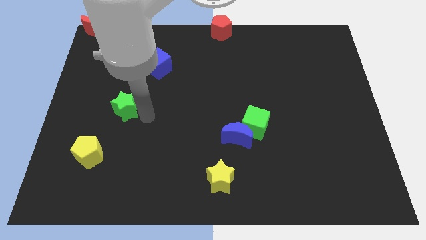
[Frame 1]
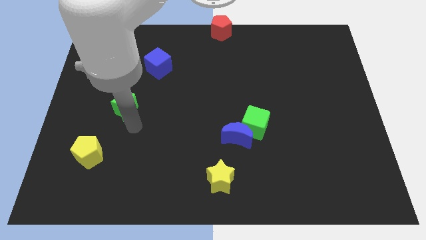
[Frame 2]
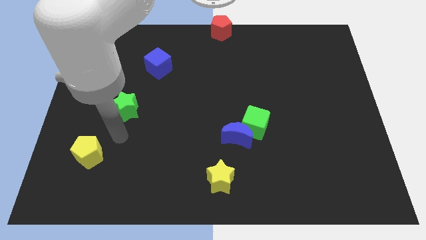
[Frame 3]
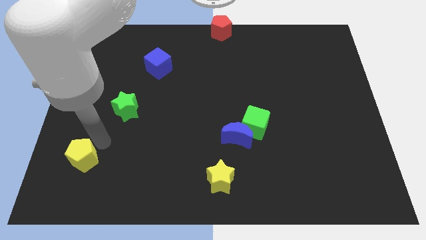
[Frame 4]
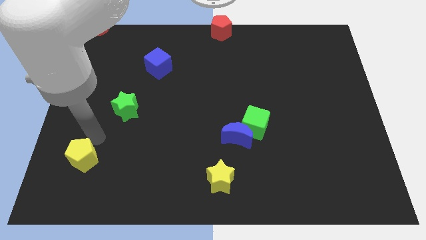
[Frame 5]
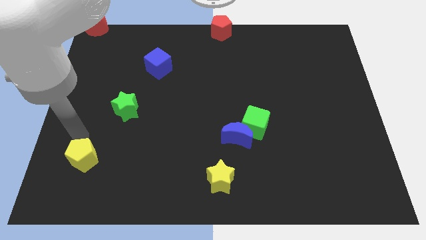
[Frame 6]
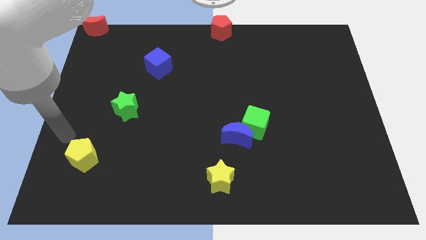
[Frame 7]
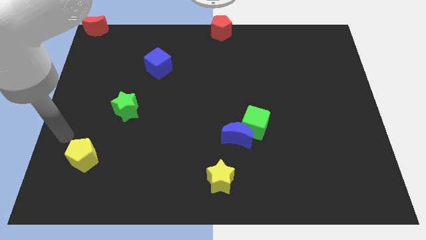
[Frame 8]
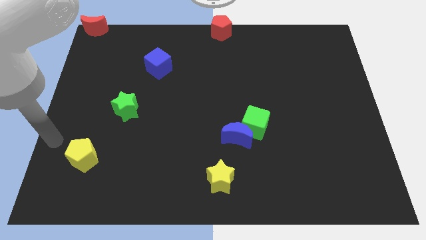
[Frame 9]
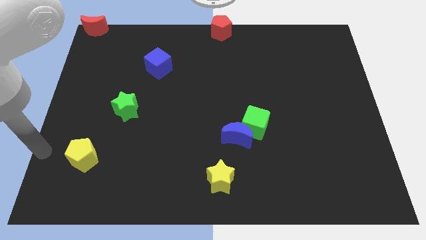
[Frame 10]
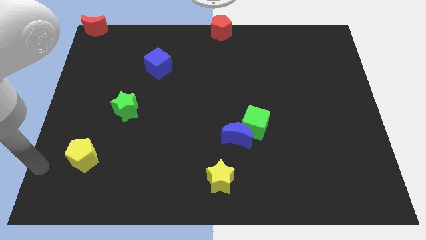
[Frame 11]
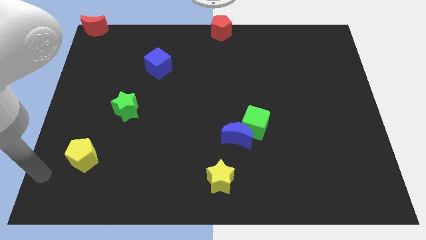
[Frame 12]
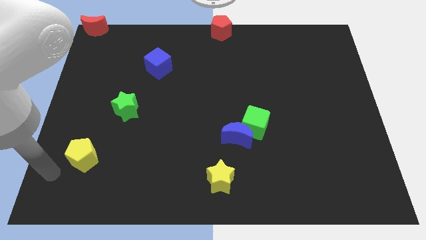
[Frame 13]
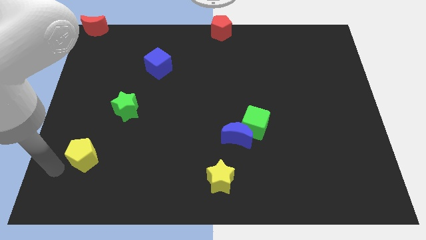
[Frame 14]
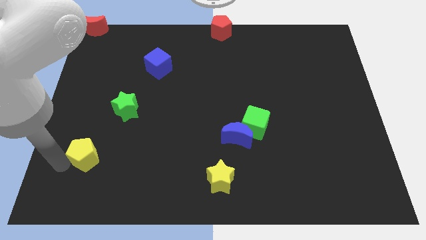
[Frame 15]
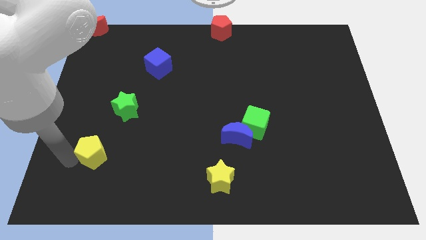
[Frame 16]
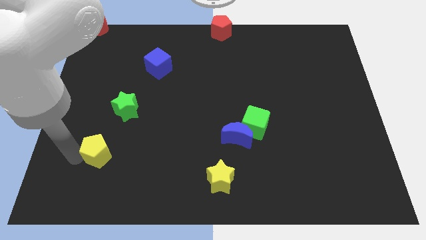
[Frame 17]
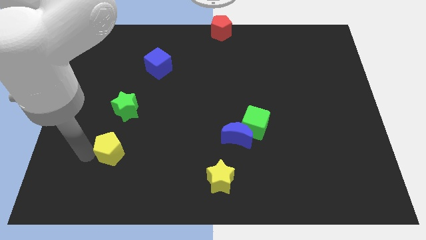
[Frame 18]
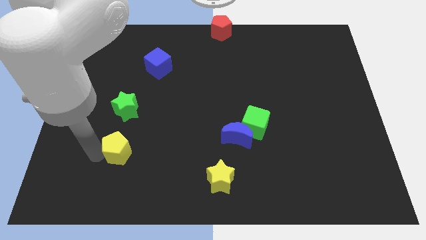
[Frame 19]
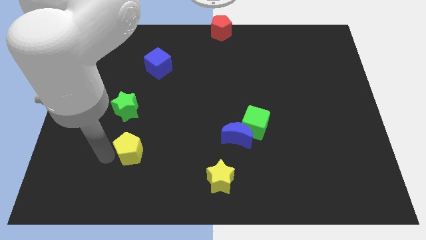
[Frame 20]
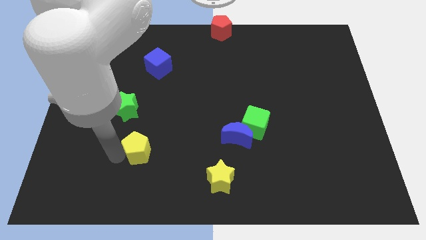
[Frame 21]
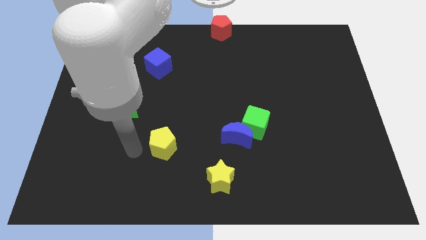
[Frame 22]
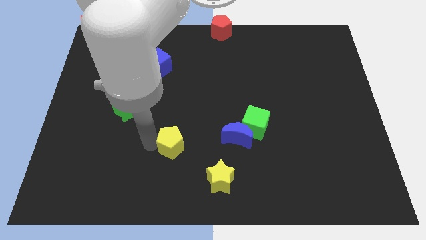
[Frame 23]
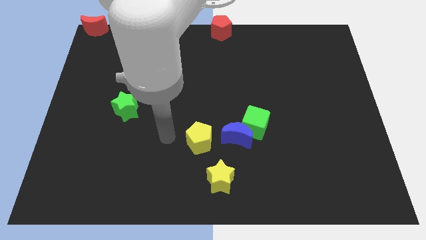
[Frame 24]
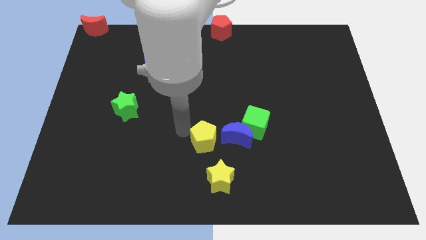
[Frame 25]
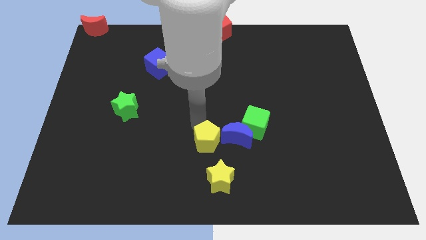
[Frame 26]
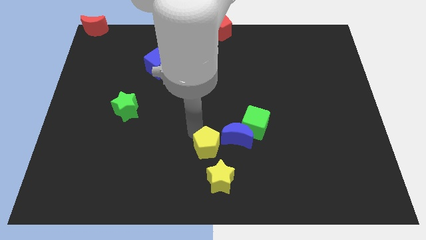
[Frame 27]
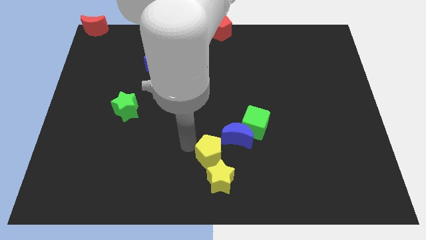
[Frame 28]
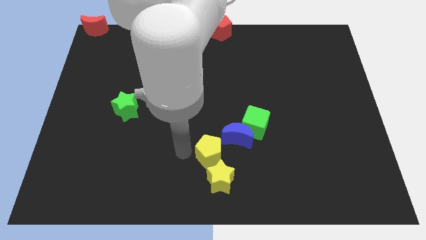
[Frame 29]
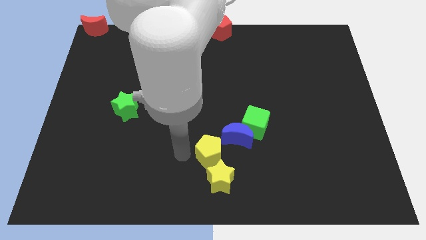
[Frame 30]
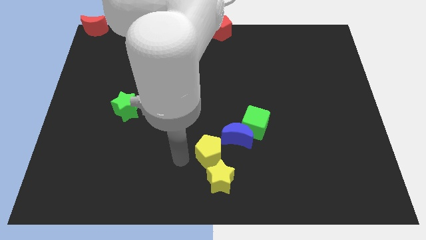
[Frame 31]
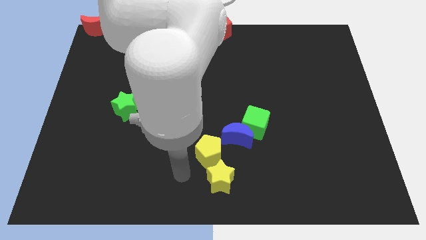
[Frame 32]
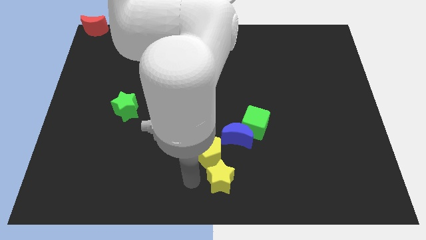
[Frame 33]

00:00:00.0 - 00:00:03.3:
place yellow pentagon above the yellow star

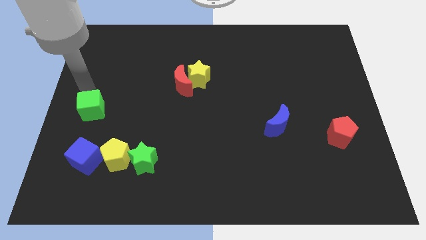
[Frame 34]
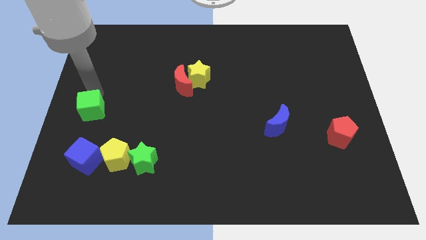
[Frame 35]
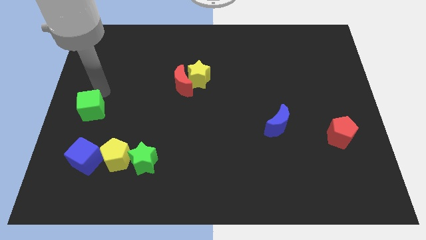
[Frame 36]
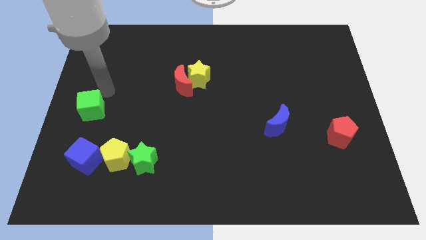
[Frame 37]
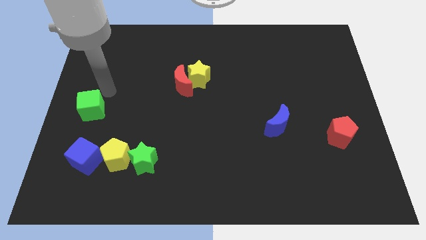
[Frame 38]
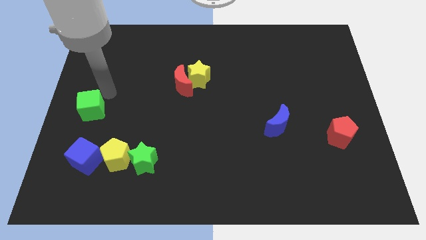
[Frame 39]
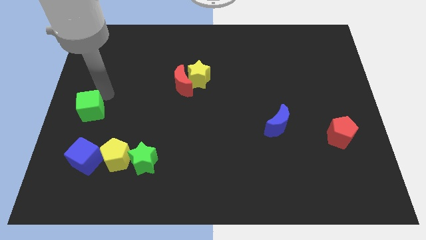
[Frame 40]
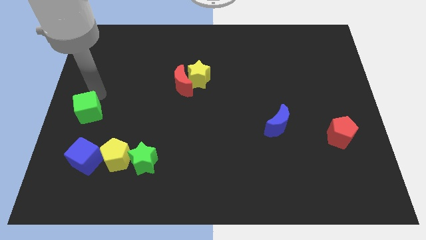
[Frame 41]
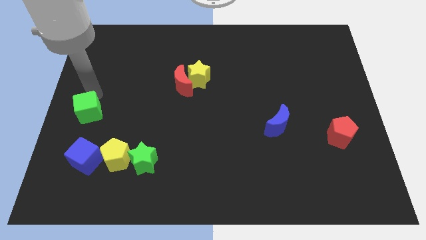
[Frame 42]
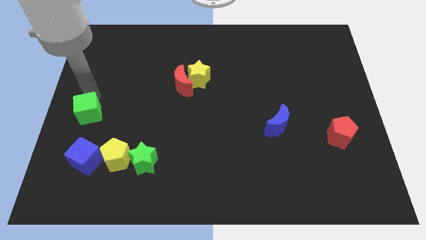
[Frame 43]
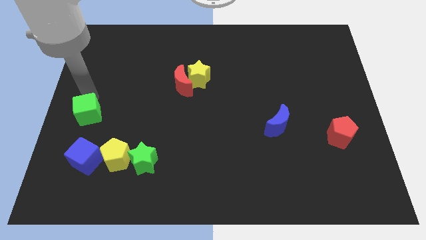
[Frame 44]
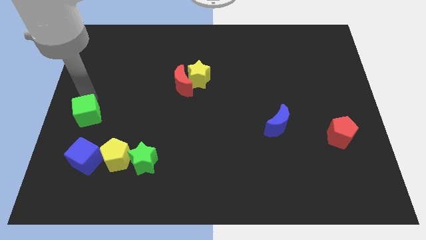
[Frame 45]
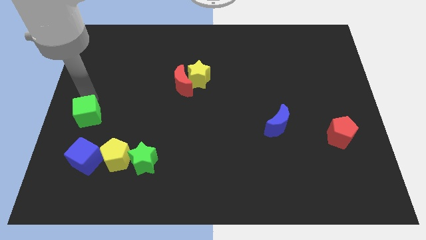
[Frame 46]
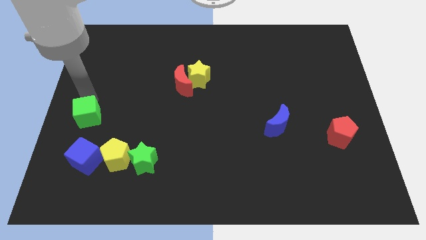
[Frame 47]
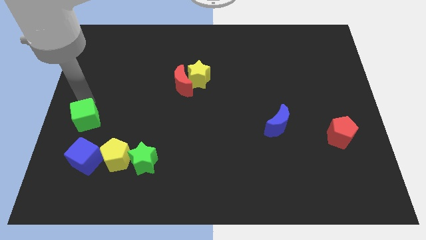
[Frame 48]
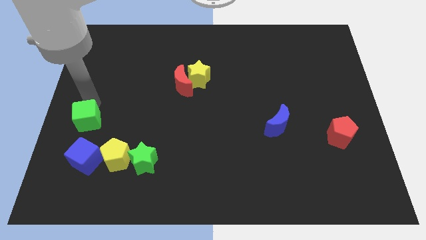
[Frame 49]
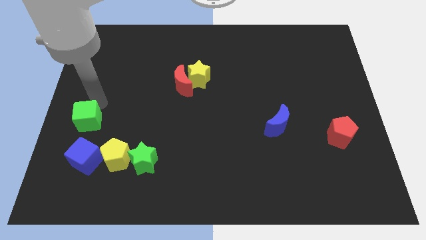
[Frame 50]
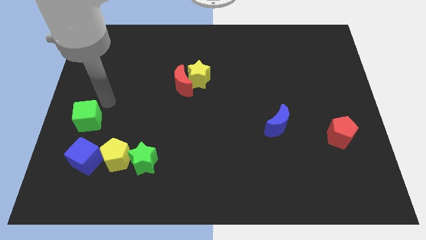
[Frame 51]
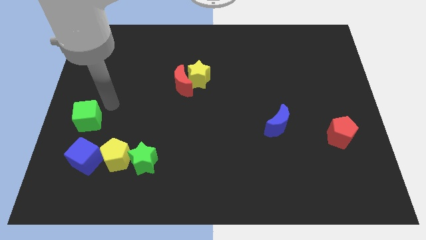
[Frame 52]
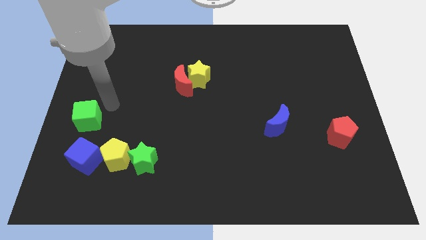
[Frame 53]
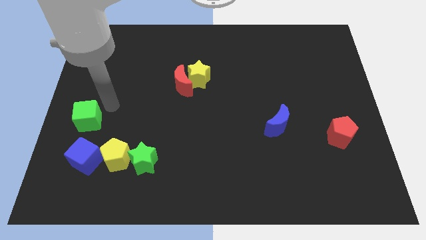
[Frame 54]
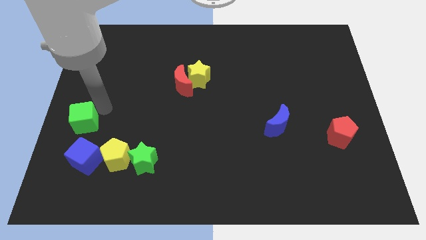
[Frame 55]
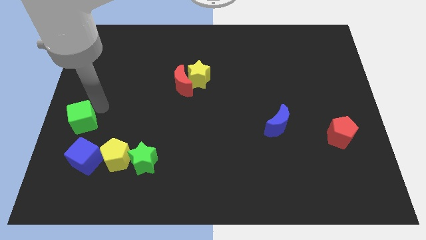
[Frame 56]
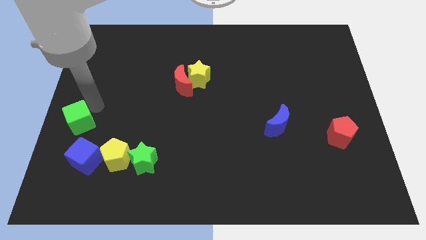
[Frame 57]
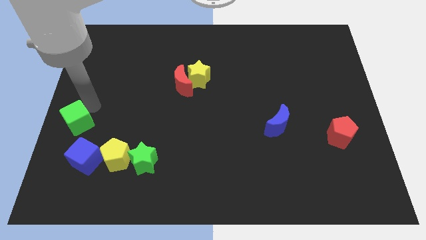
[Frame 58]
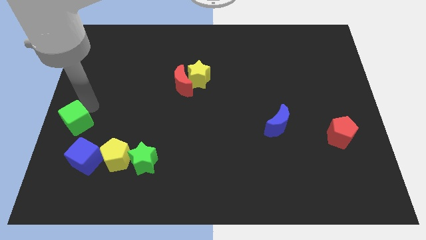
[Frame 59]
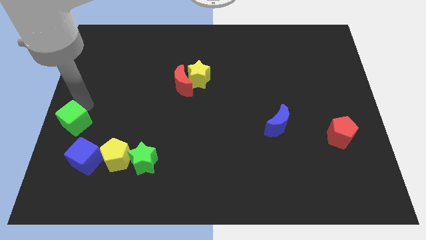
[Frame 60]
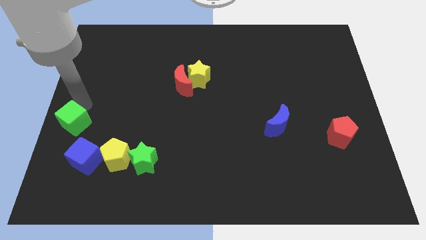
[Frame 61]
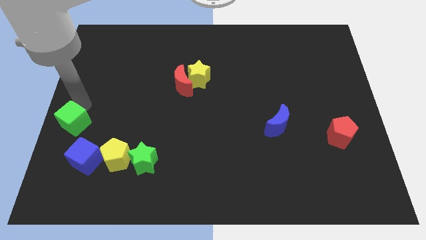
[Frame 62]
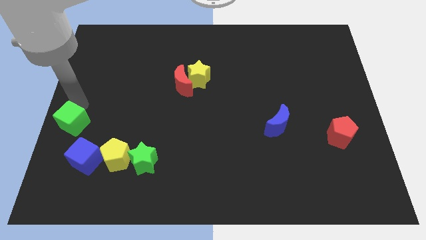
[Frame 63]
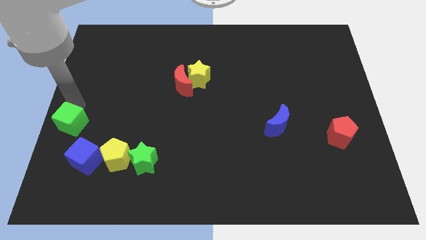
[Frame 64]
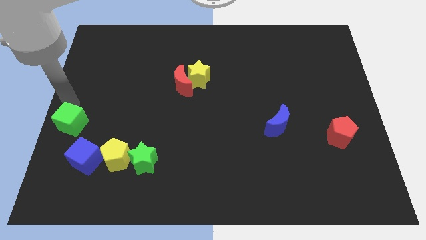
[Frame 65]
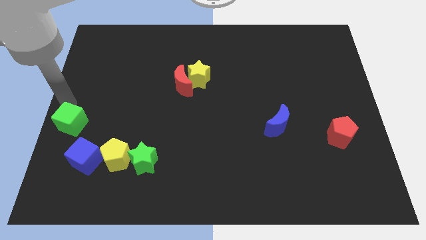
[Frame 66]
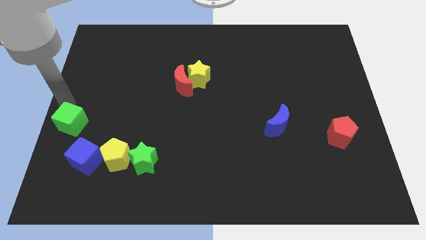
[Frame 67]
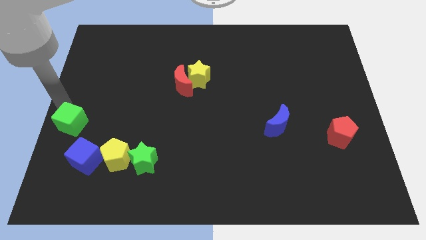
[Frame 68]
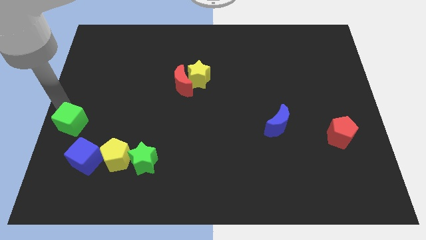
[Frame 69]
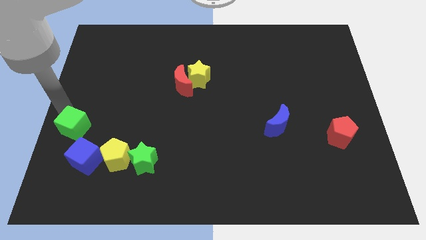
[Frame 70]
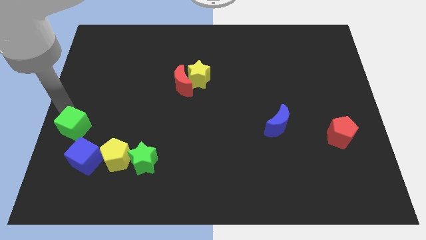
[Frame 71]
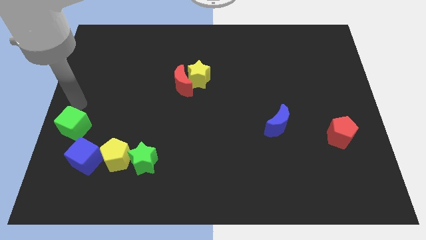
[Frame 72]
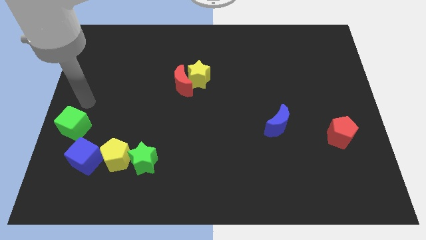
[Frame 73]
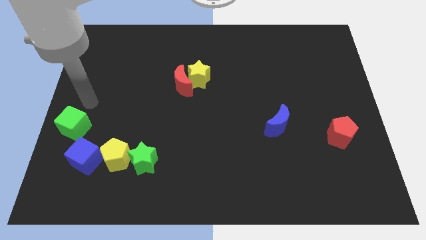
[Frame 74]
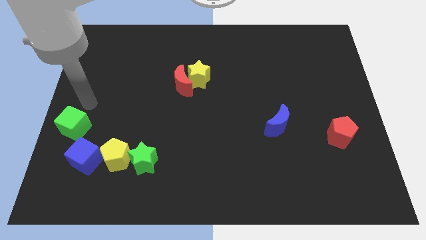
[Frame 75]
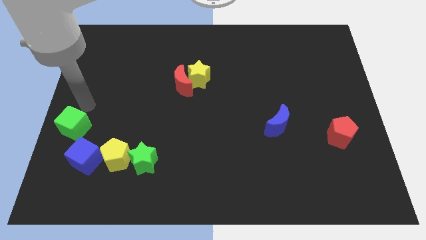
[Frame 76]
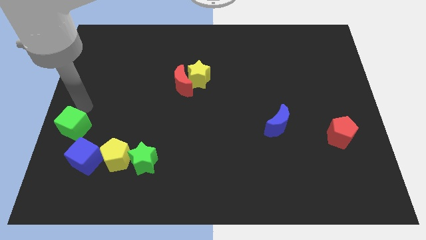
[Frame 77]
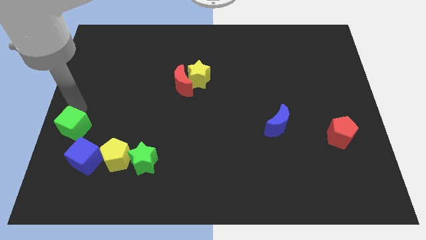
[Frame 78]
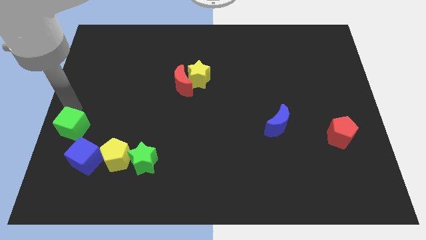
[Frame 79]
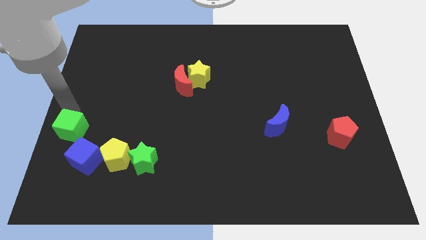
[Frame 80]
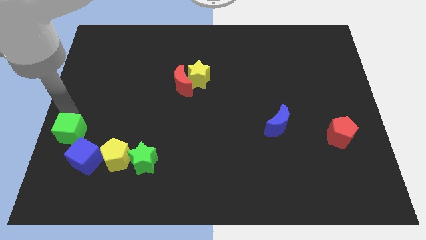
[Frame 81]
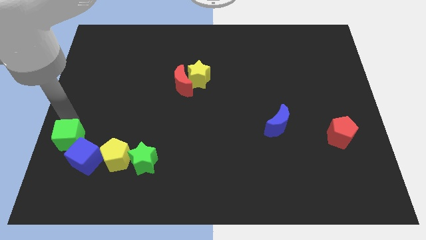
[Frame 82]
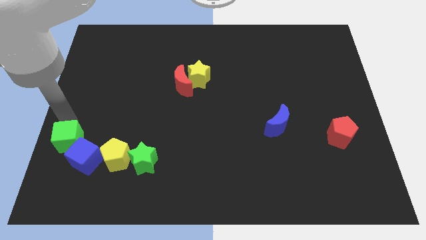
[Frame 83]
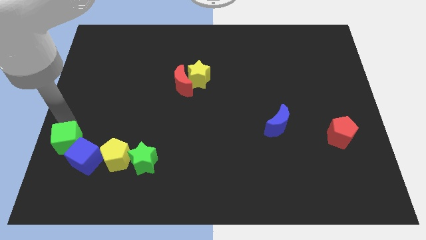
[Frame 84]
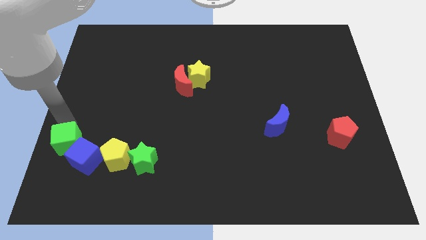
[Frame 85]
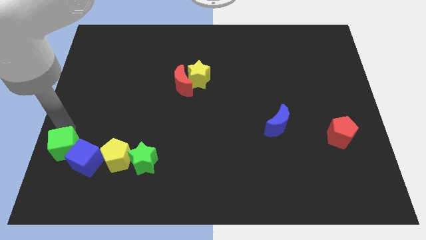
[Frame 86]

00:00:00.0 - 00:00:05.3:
move the green cube into the blue cube

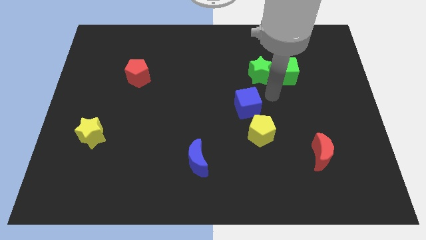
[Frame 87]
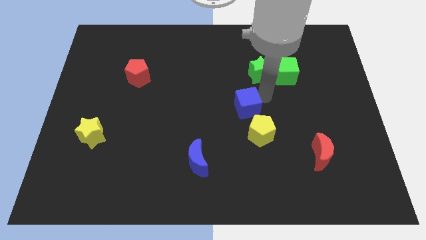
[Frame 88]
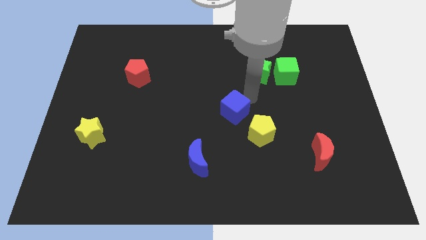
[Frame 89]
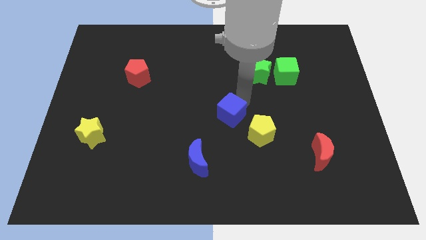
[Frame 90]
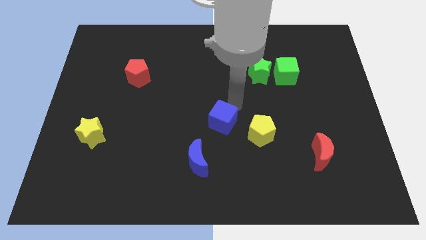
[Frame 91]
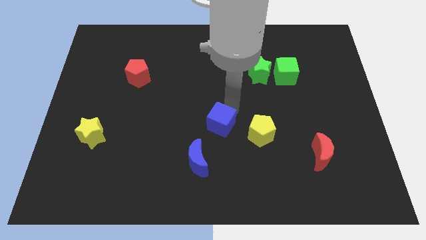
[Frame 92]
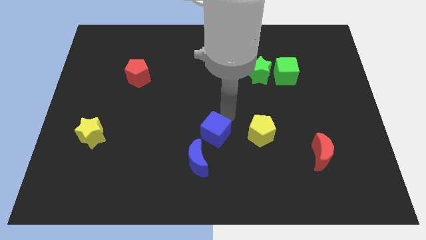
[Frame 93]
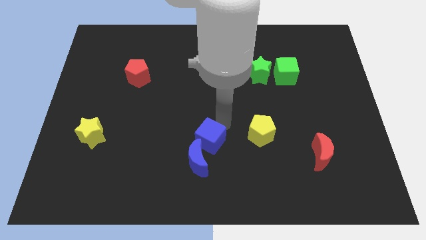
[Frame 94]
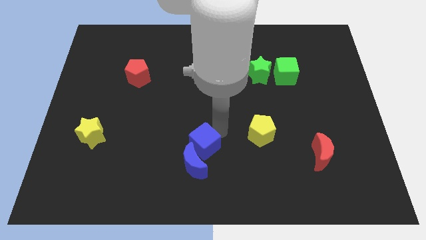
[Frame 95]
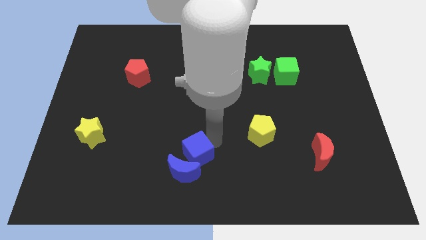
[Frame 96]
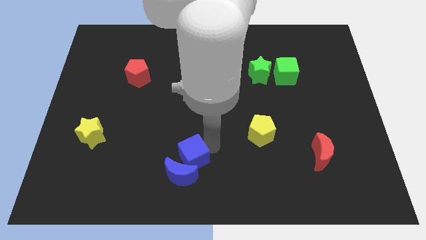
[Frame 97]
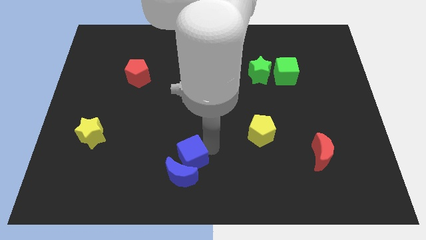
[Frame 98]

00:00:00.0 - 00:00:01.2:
move blue cube into blue moon
